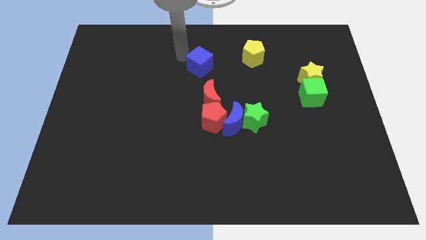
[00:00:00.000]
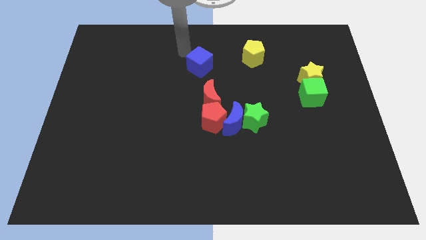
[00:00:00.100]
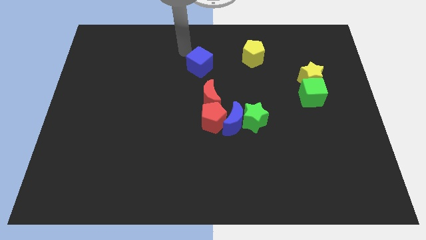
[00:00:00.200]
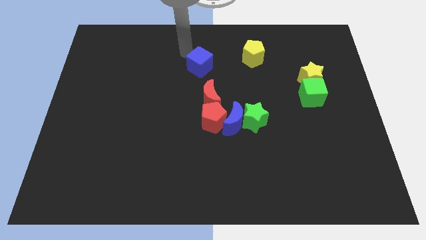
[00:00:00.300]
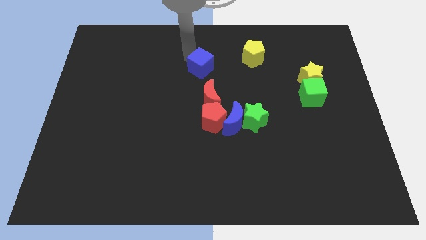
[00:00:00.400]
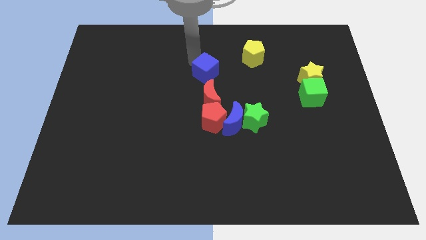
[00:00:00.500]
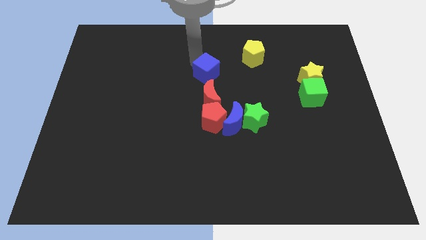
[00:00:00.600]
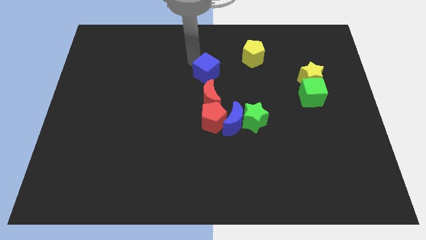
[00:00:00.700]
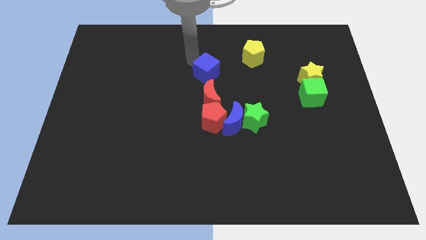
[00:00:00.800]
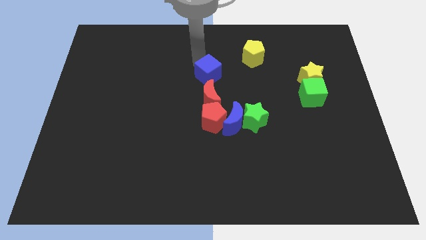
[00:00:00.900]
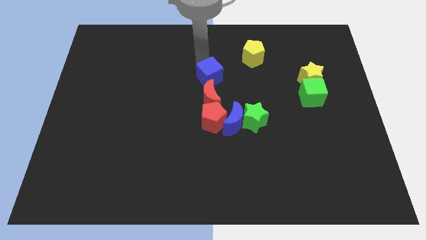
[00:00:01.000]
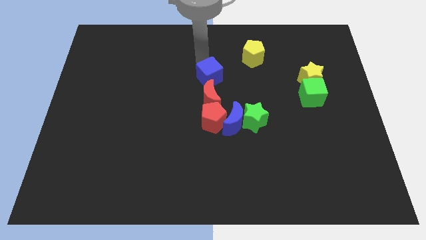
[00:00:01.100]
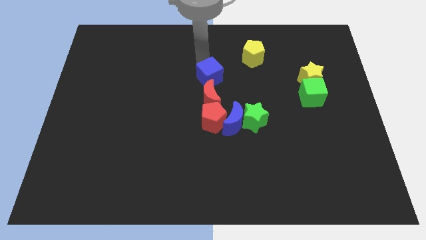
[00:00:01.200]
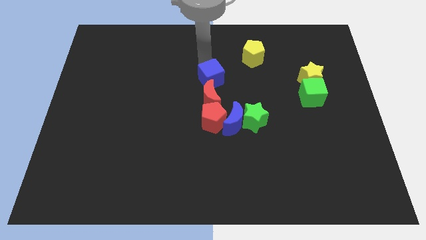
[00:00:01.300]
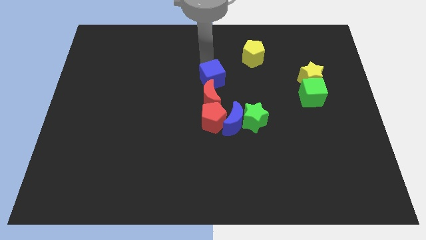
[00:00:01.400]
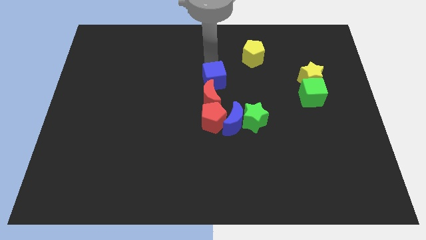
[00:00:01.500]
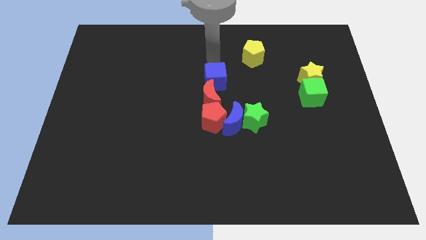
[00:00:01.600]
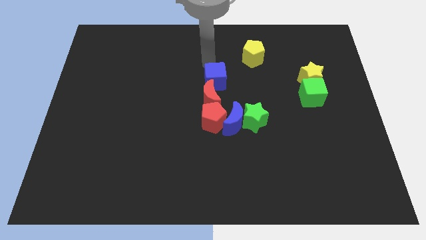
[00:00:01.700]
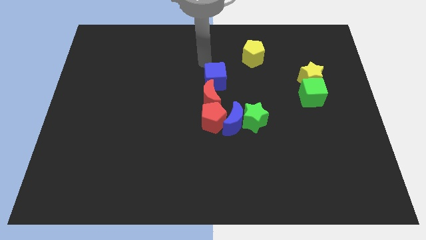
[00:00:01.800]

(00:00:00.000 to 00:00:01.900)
move the blue cube to the top of the red moon

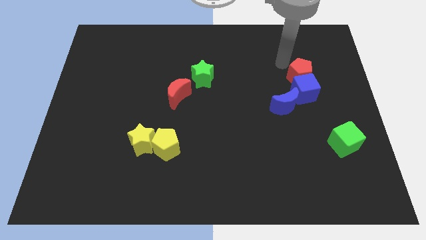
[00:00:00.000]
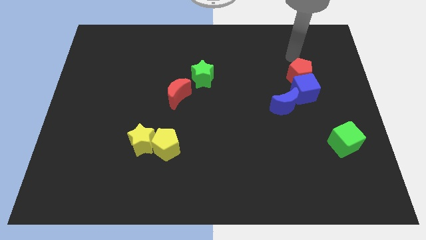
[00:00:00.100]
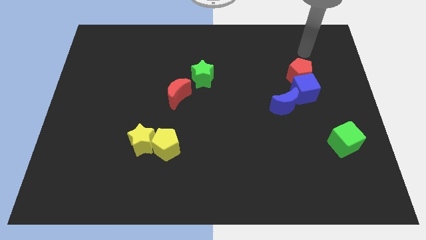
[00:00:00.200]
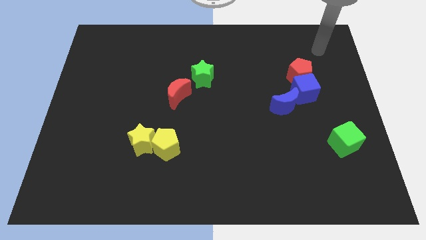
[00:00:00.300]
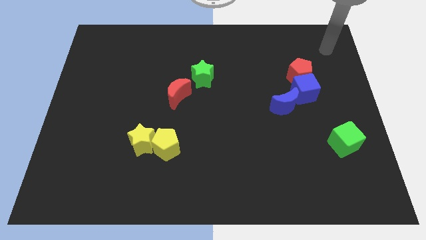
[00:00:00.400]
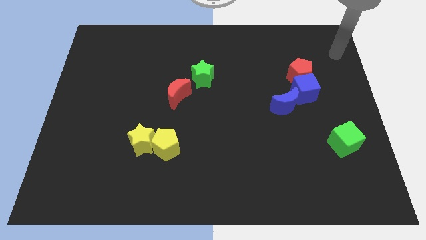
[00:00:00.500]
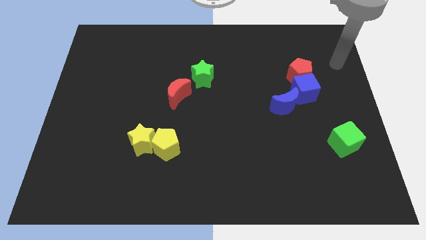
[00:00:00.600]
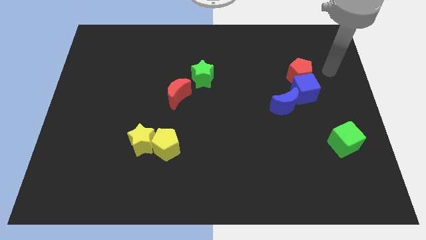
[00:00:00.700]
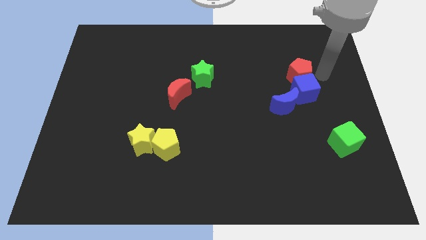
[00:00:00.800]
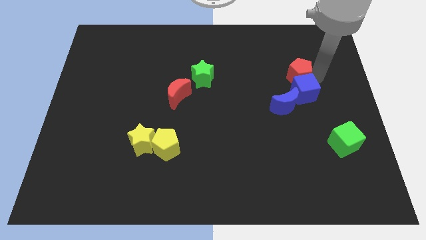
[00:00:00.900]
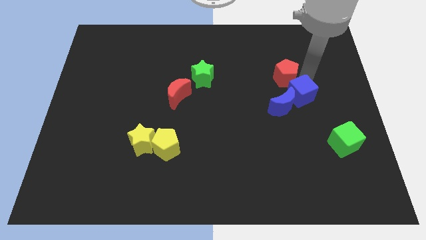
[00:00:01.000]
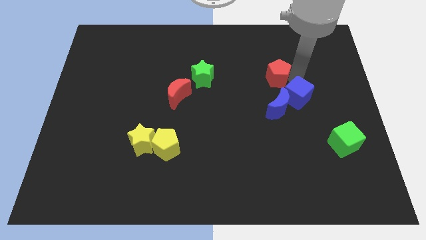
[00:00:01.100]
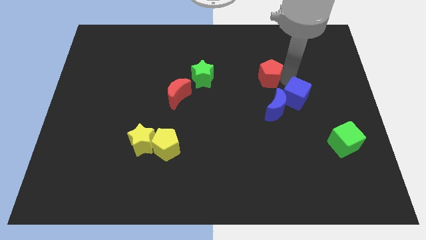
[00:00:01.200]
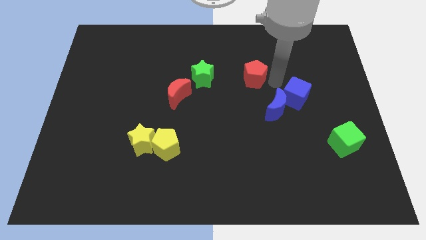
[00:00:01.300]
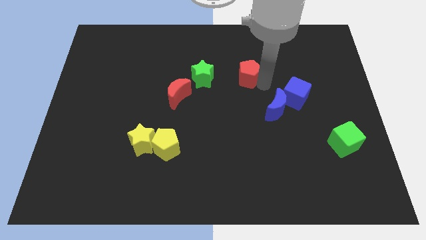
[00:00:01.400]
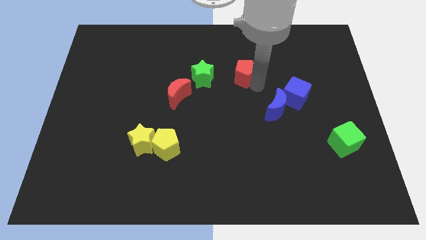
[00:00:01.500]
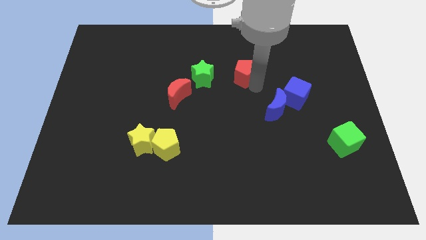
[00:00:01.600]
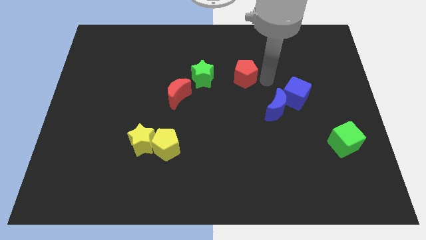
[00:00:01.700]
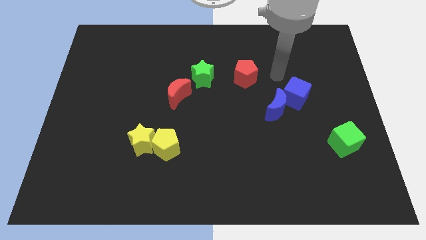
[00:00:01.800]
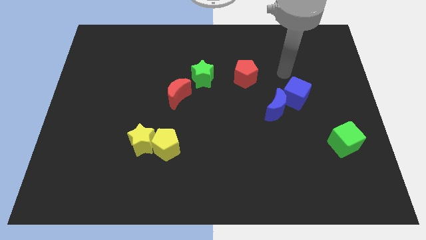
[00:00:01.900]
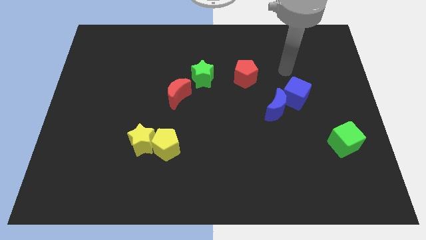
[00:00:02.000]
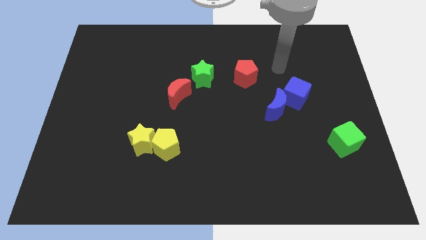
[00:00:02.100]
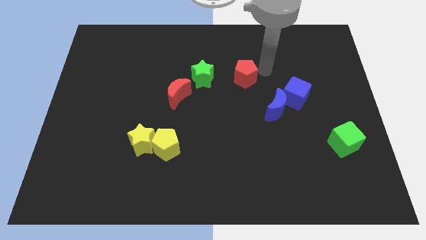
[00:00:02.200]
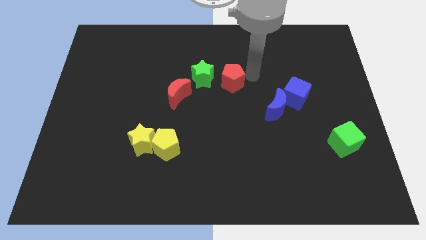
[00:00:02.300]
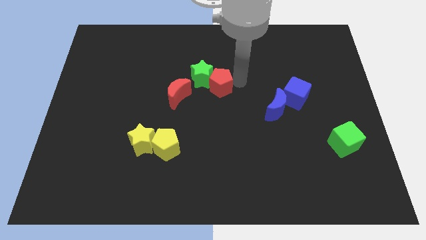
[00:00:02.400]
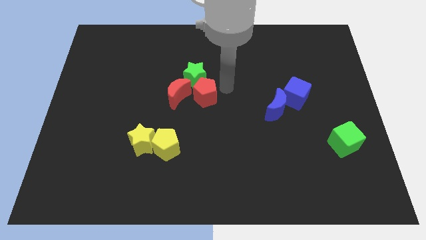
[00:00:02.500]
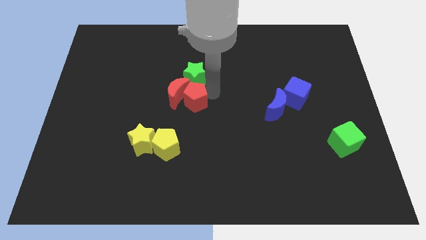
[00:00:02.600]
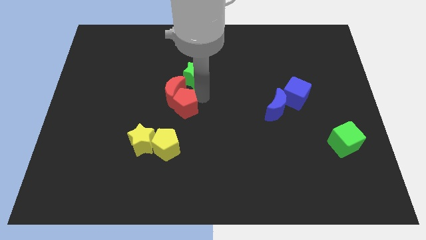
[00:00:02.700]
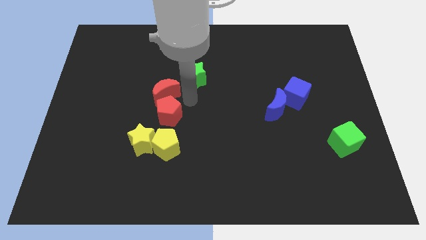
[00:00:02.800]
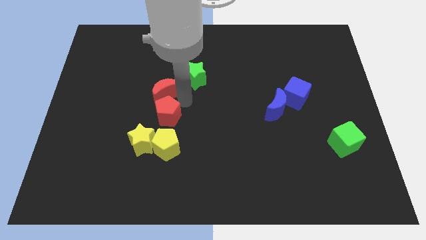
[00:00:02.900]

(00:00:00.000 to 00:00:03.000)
place the red pentagon at the bottom of red crescent

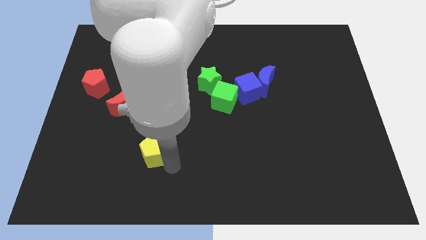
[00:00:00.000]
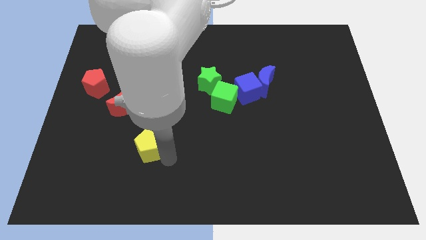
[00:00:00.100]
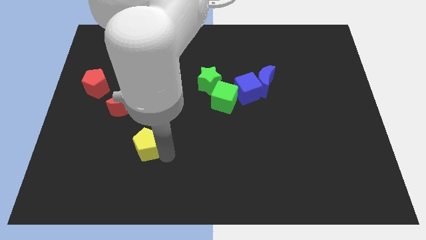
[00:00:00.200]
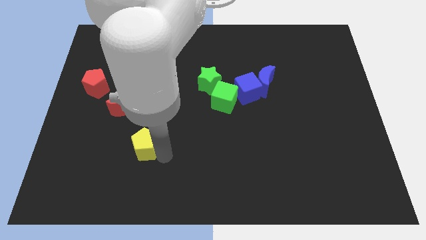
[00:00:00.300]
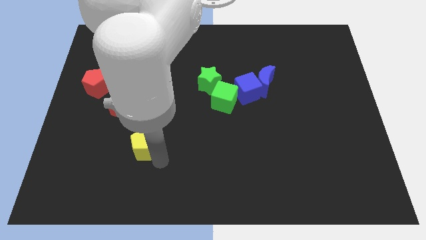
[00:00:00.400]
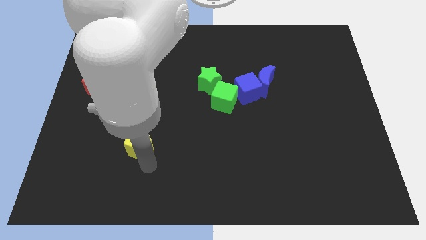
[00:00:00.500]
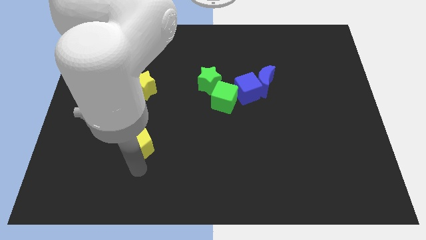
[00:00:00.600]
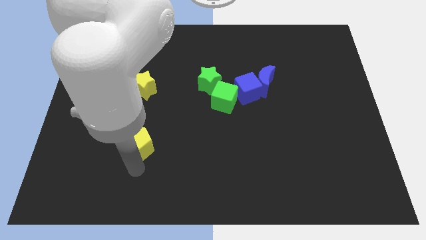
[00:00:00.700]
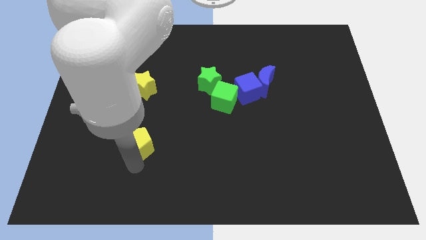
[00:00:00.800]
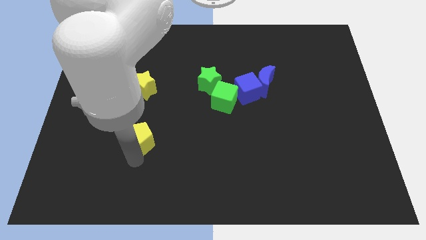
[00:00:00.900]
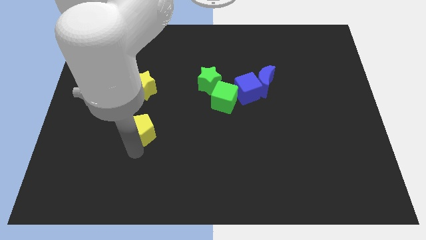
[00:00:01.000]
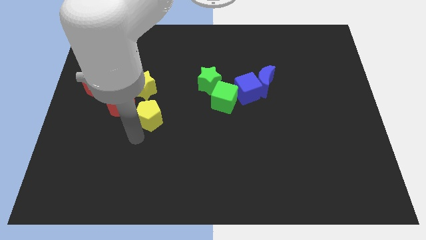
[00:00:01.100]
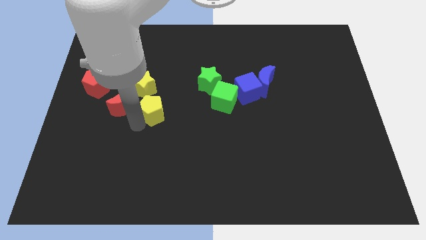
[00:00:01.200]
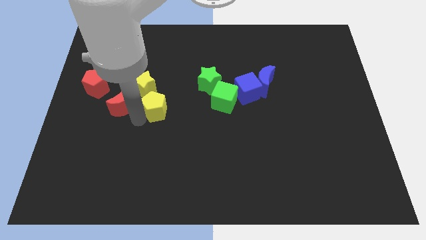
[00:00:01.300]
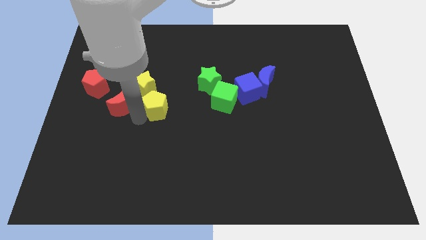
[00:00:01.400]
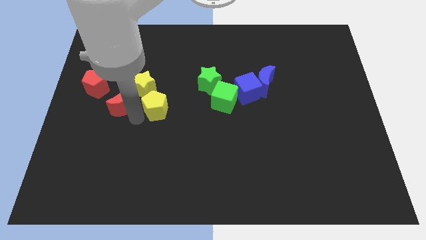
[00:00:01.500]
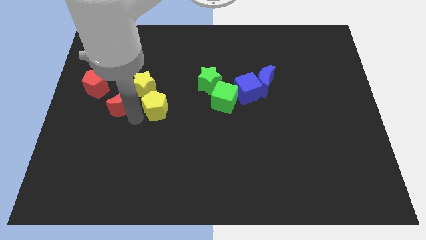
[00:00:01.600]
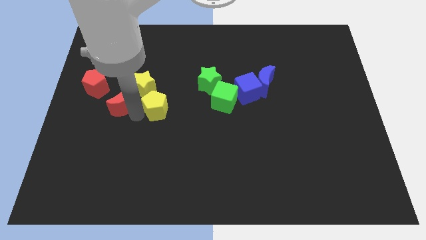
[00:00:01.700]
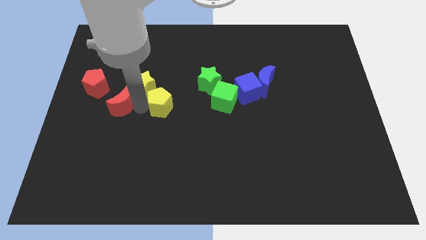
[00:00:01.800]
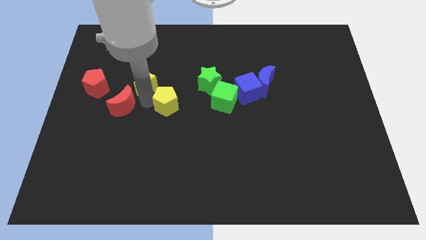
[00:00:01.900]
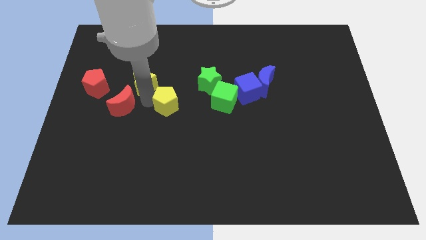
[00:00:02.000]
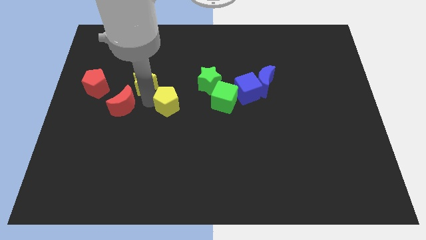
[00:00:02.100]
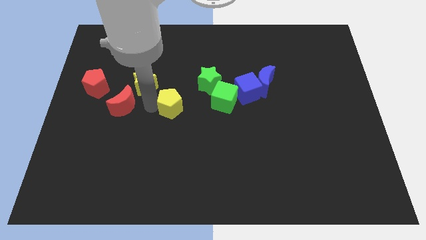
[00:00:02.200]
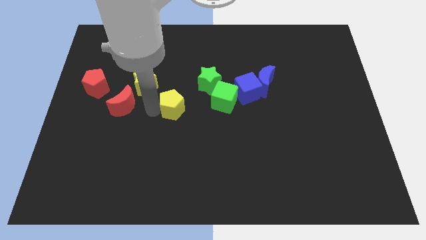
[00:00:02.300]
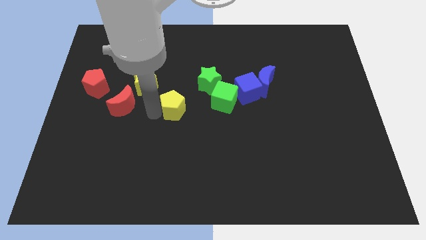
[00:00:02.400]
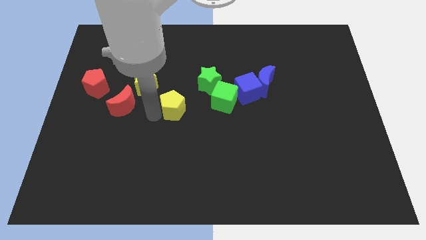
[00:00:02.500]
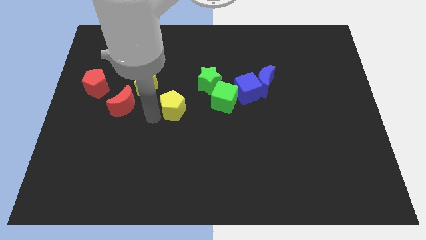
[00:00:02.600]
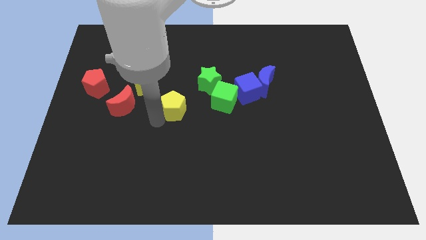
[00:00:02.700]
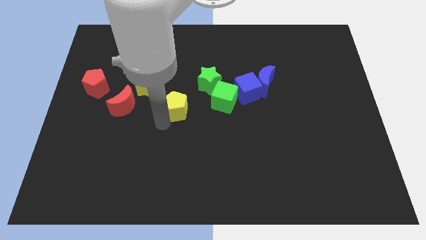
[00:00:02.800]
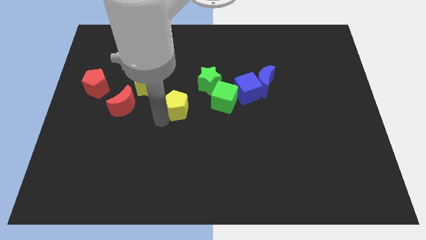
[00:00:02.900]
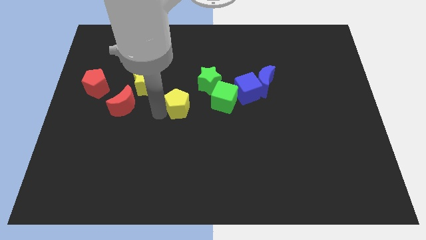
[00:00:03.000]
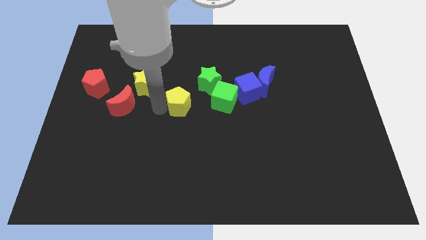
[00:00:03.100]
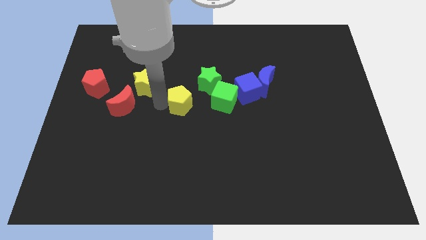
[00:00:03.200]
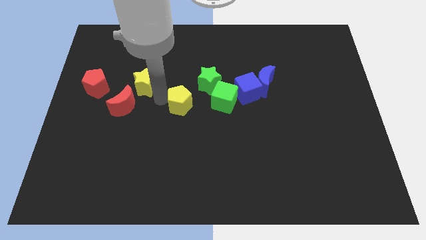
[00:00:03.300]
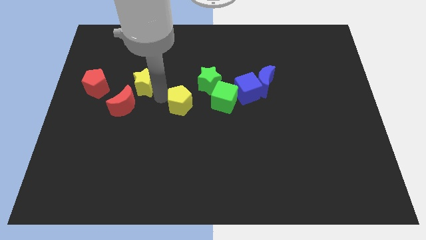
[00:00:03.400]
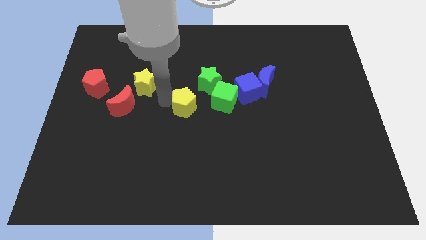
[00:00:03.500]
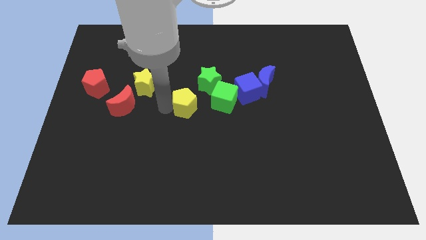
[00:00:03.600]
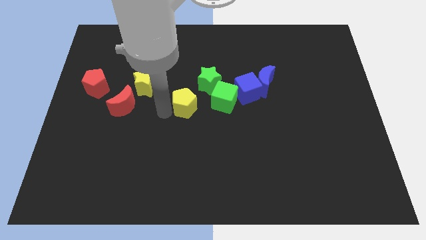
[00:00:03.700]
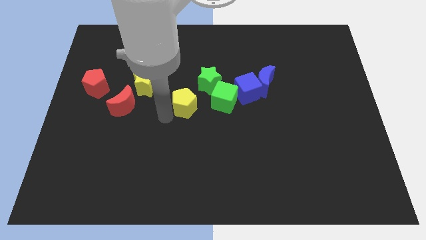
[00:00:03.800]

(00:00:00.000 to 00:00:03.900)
place yellow pentagon to the bottom left of green star
